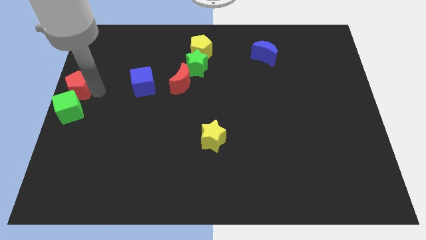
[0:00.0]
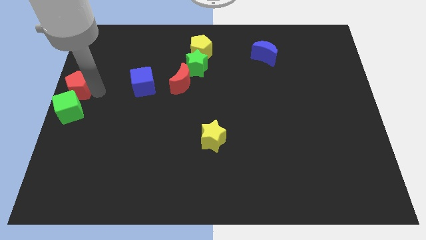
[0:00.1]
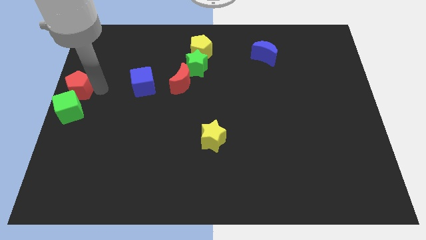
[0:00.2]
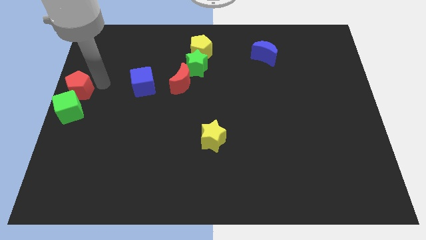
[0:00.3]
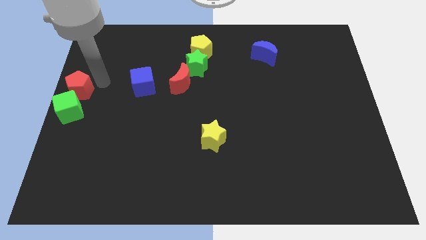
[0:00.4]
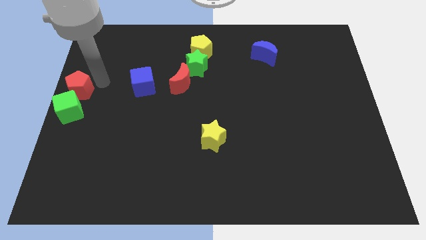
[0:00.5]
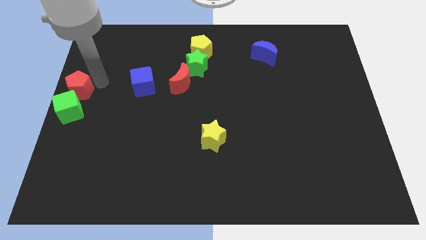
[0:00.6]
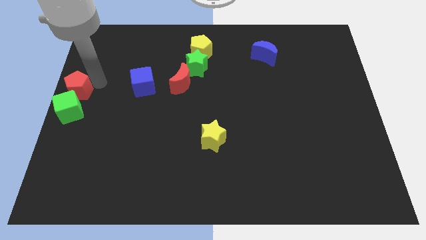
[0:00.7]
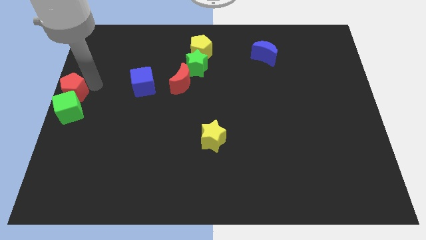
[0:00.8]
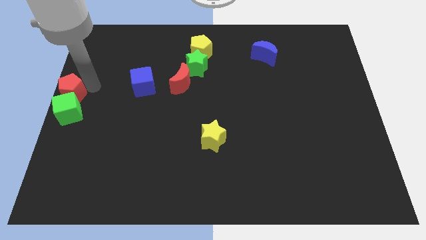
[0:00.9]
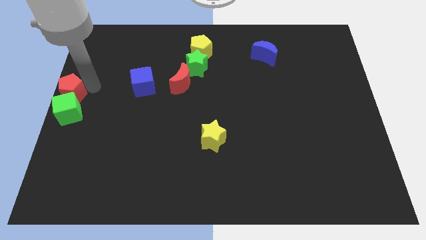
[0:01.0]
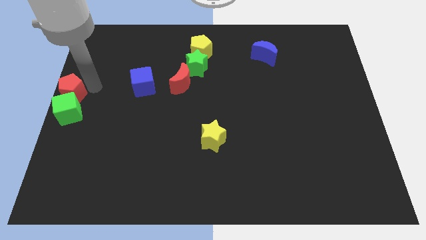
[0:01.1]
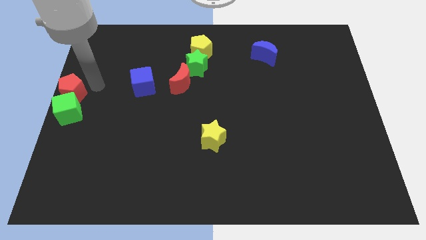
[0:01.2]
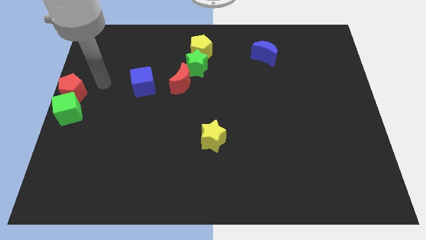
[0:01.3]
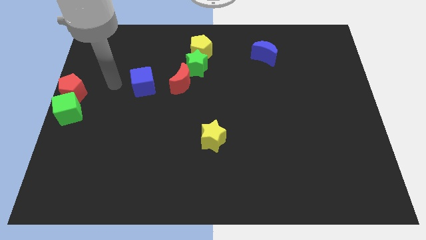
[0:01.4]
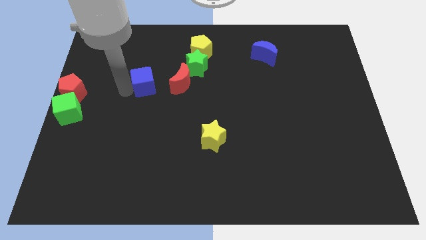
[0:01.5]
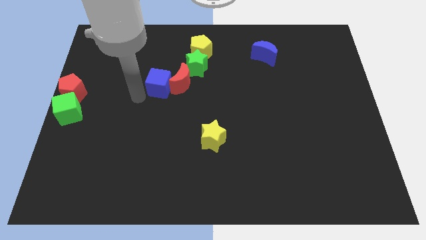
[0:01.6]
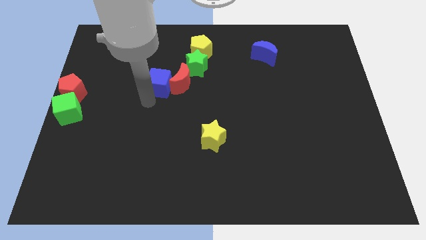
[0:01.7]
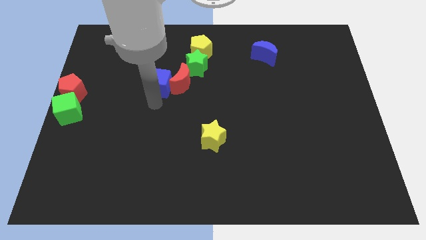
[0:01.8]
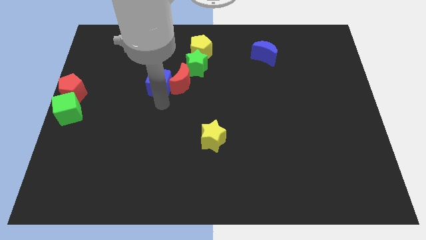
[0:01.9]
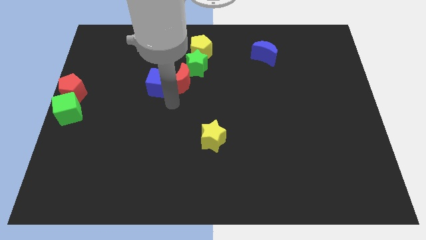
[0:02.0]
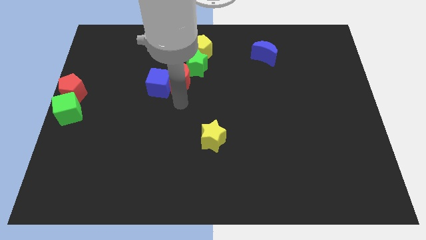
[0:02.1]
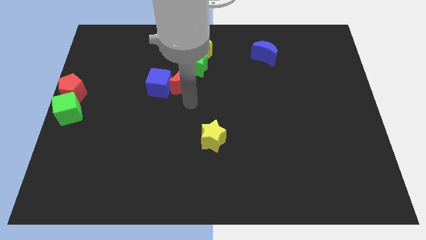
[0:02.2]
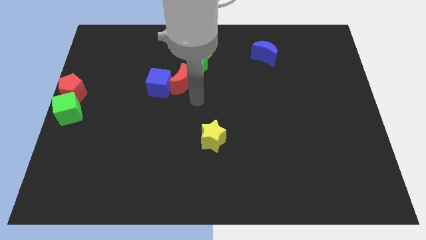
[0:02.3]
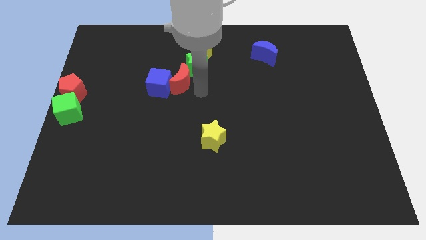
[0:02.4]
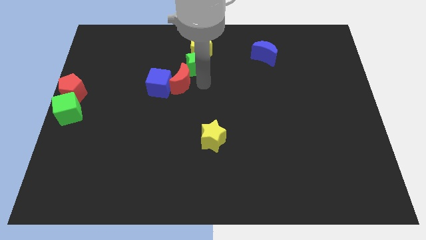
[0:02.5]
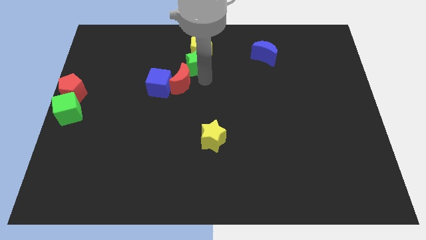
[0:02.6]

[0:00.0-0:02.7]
move arm near green star

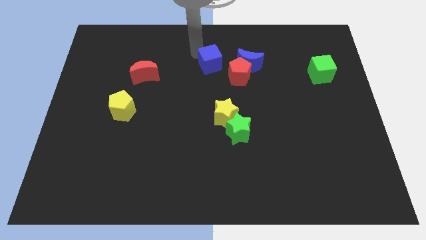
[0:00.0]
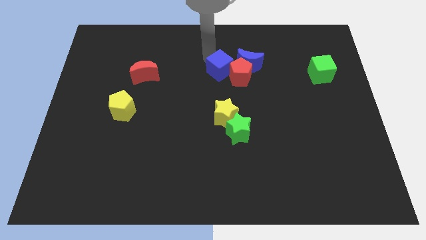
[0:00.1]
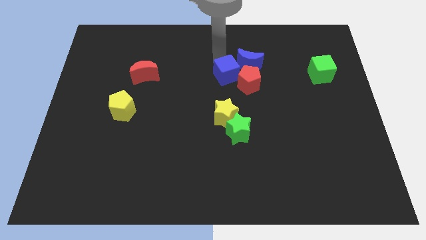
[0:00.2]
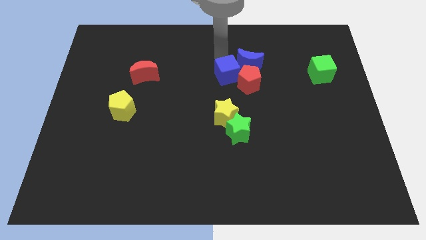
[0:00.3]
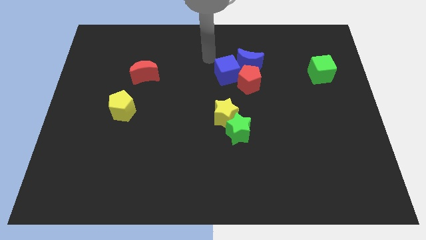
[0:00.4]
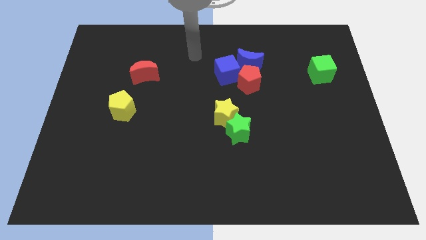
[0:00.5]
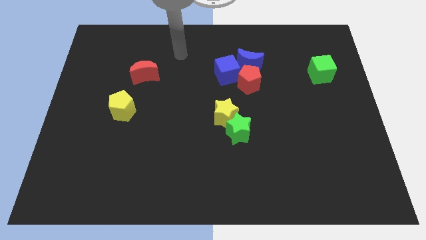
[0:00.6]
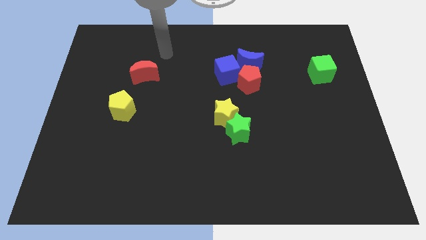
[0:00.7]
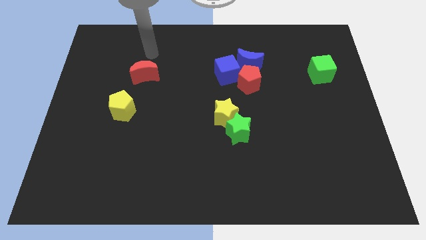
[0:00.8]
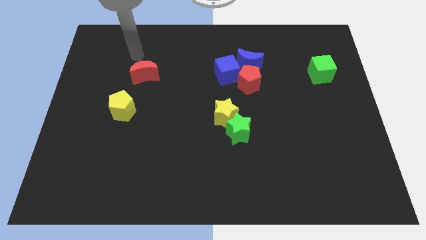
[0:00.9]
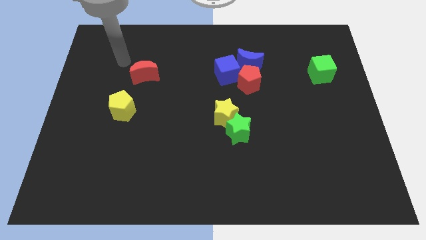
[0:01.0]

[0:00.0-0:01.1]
place blue cube above yellow star

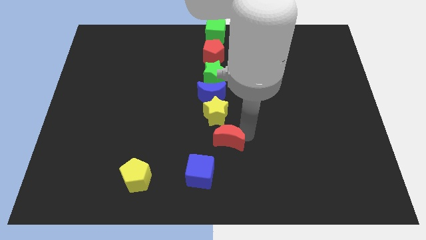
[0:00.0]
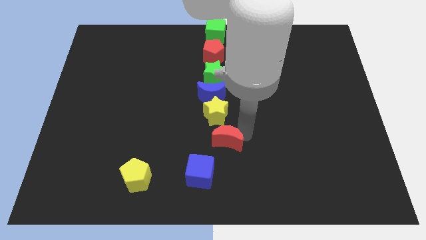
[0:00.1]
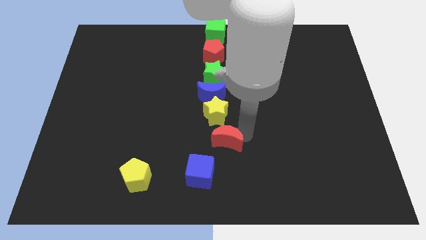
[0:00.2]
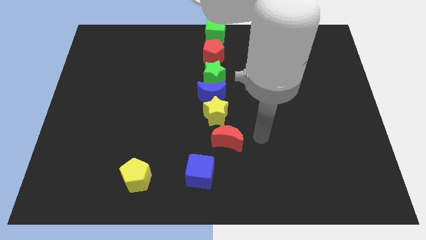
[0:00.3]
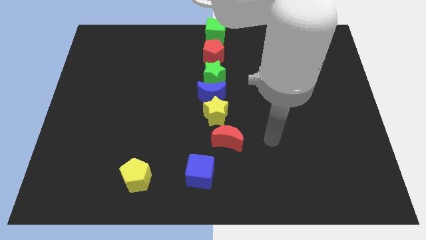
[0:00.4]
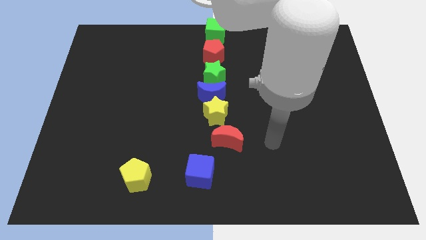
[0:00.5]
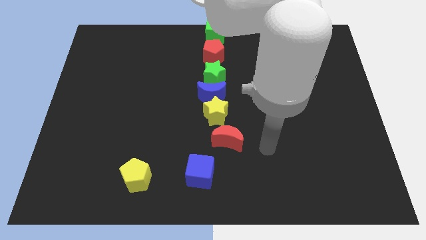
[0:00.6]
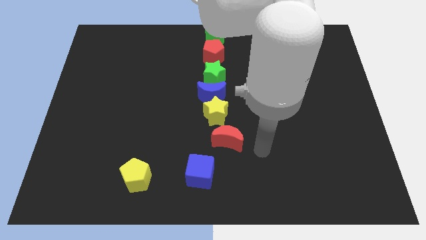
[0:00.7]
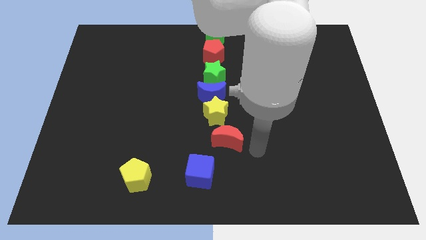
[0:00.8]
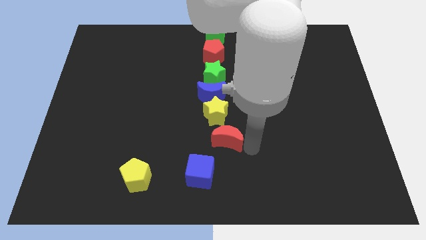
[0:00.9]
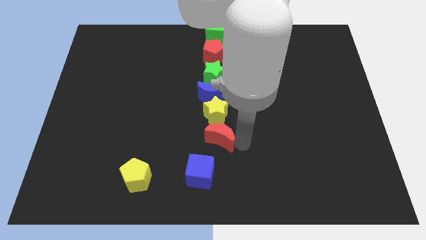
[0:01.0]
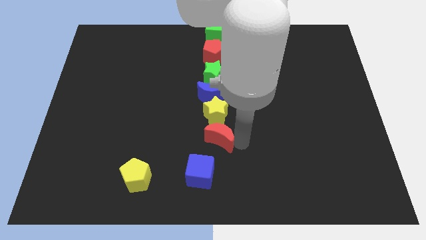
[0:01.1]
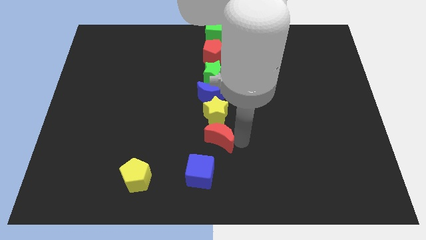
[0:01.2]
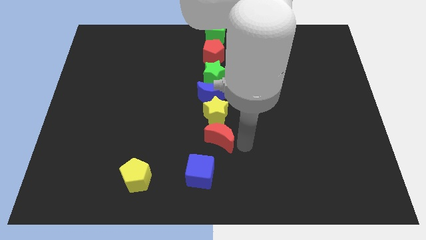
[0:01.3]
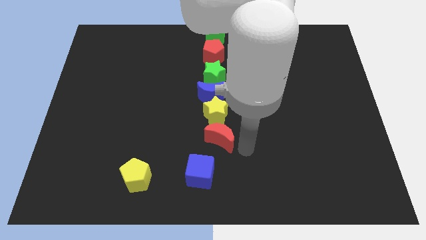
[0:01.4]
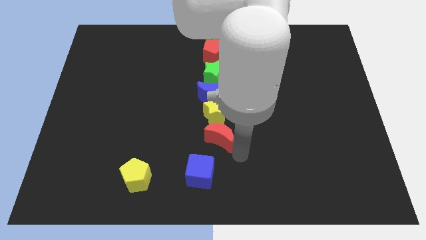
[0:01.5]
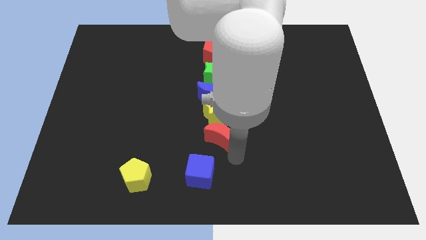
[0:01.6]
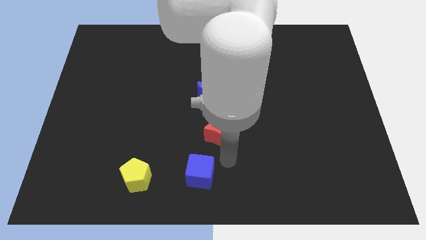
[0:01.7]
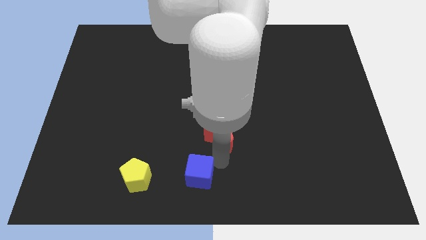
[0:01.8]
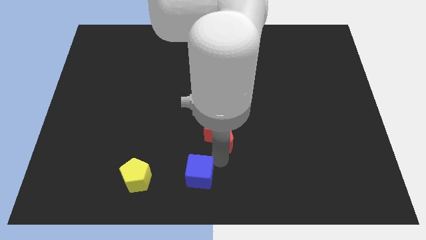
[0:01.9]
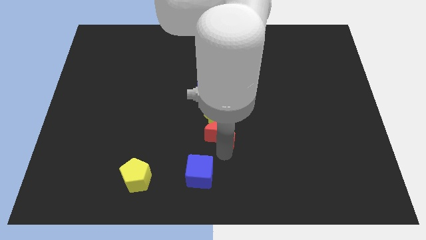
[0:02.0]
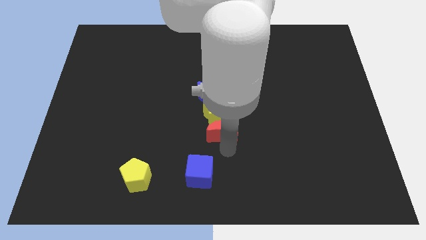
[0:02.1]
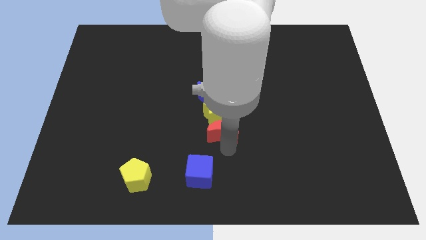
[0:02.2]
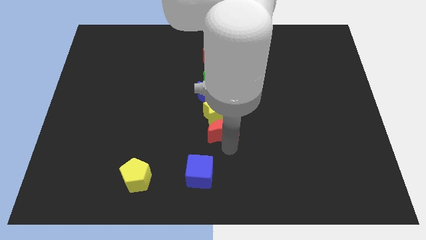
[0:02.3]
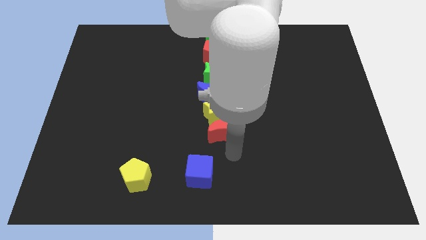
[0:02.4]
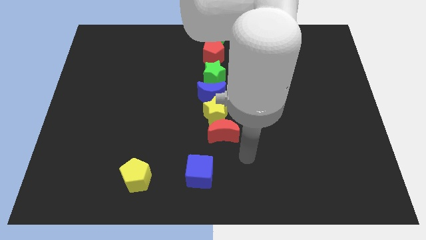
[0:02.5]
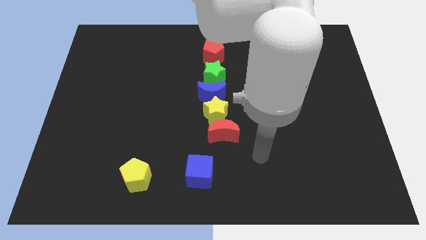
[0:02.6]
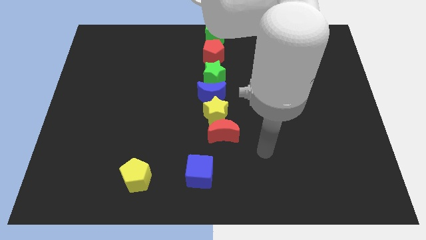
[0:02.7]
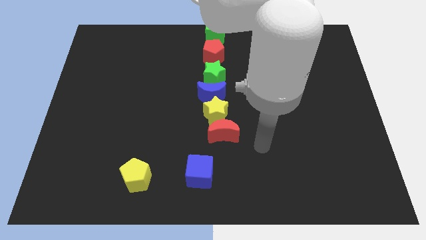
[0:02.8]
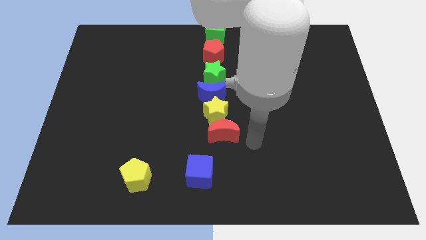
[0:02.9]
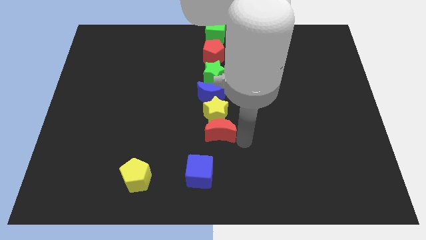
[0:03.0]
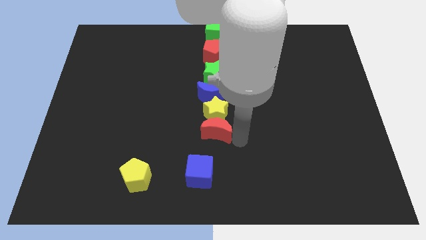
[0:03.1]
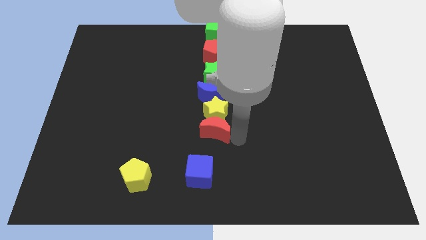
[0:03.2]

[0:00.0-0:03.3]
push the red moon below the yellow star to make a vertical line

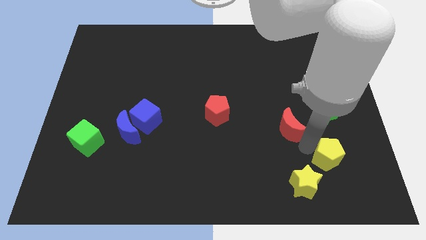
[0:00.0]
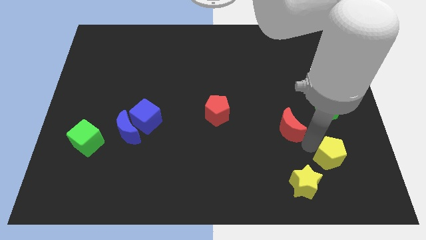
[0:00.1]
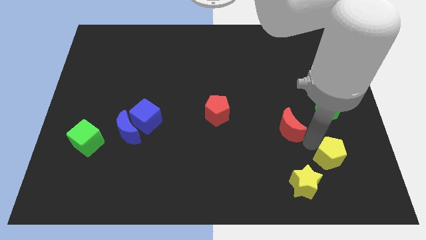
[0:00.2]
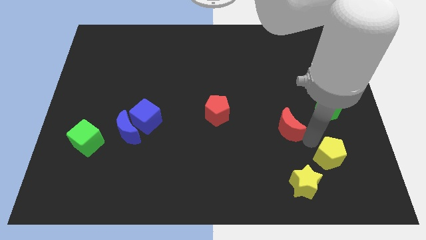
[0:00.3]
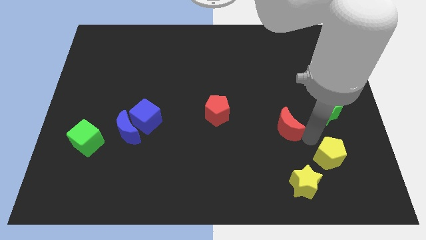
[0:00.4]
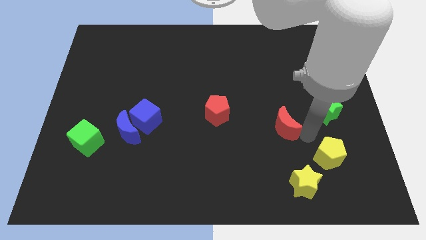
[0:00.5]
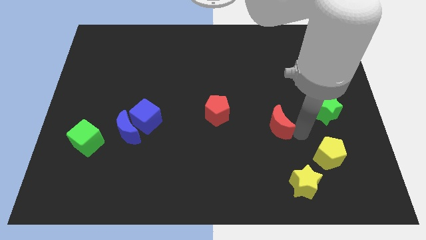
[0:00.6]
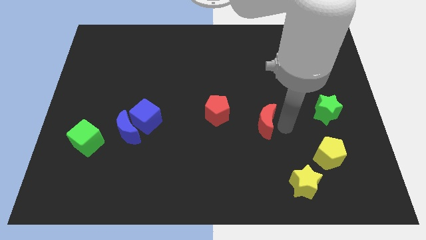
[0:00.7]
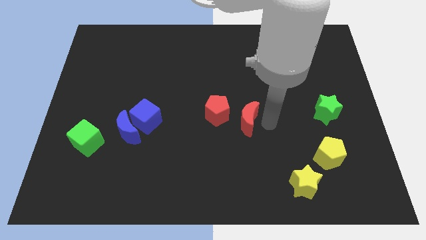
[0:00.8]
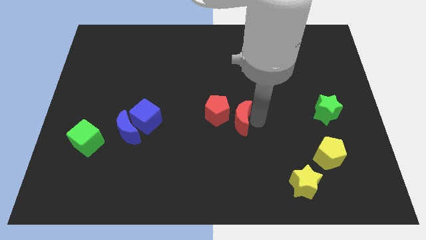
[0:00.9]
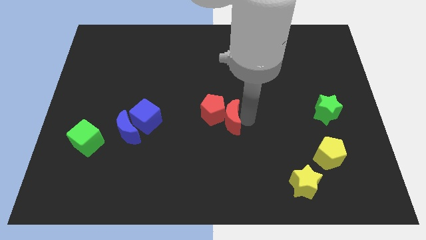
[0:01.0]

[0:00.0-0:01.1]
move the red crescent into the red pentagon

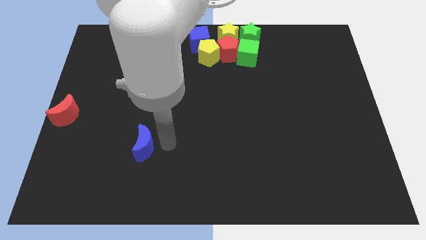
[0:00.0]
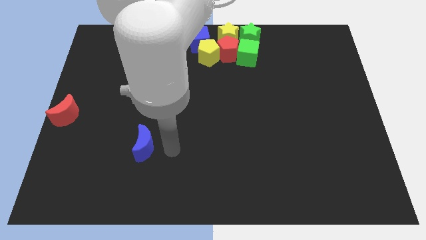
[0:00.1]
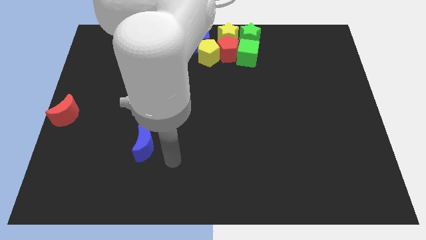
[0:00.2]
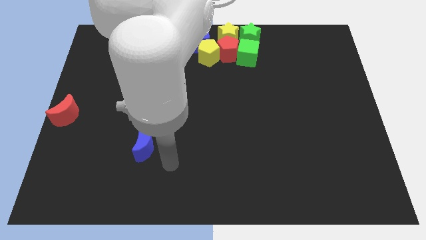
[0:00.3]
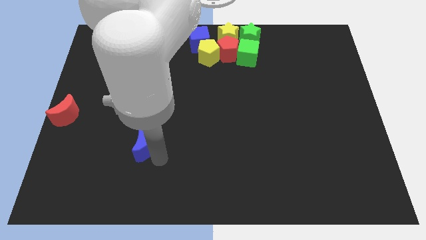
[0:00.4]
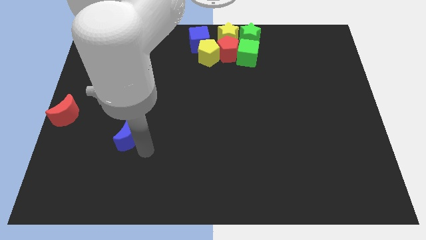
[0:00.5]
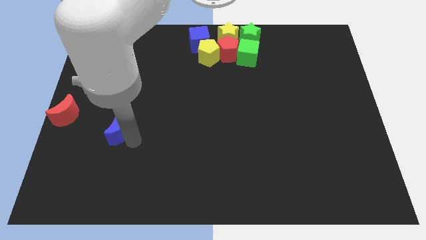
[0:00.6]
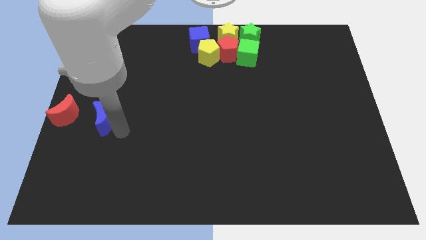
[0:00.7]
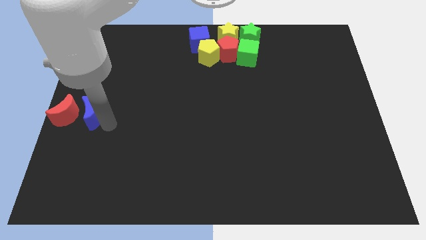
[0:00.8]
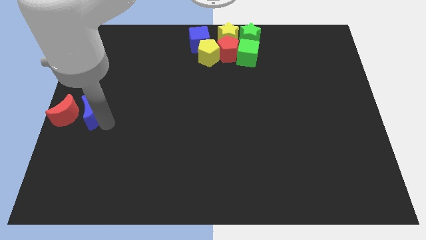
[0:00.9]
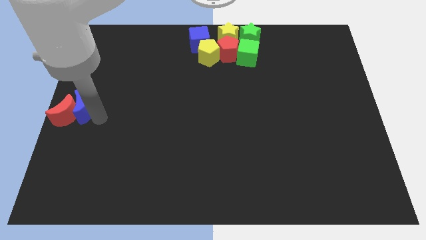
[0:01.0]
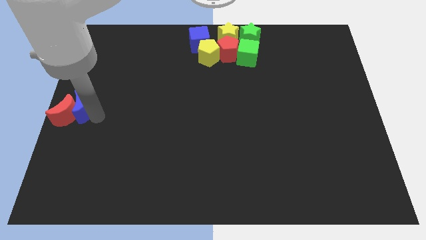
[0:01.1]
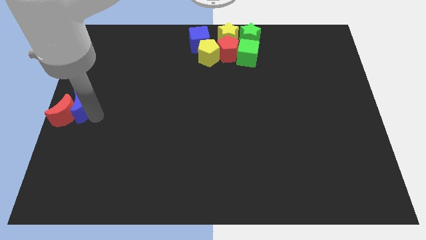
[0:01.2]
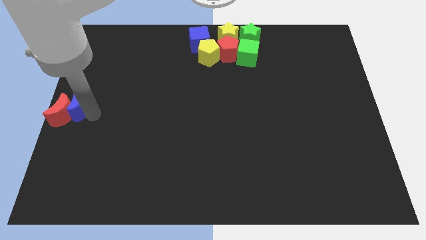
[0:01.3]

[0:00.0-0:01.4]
push the blue moon into the red moon to the center left of the board
